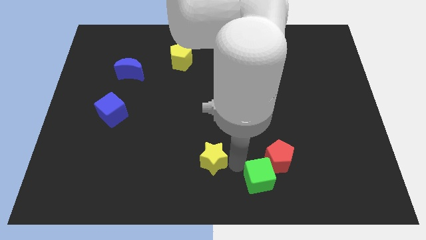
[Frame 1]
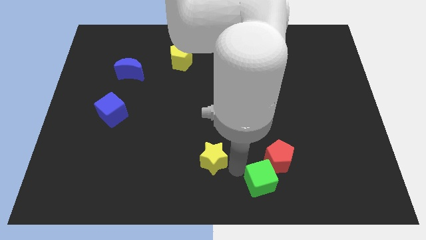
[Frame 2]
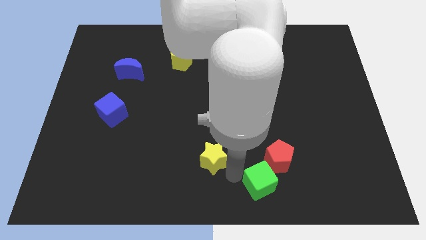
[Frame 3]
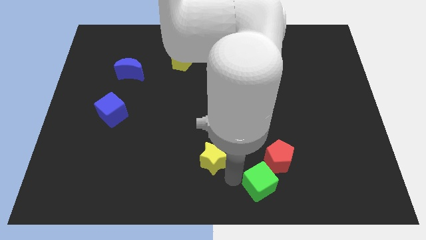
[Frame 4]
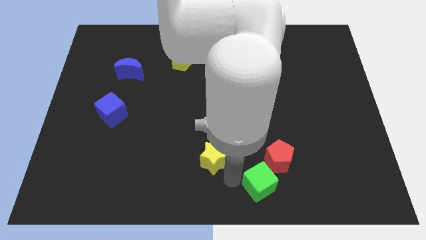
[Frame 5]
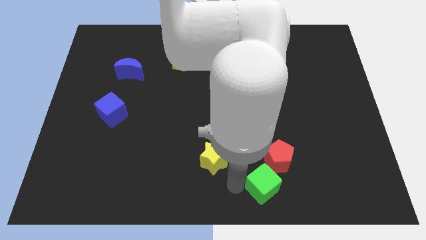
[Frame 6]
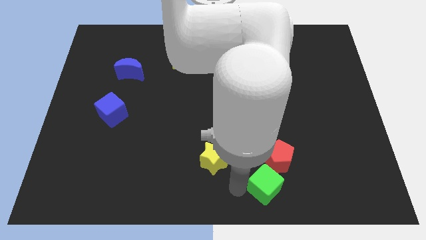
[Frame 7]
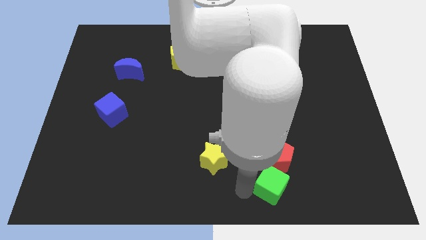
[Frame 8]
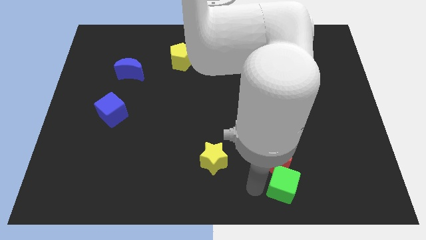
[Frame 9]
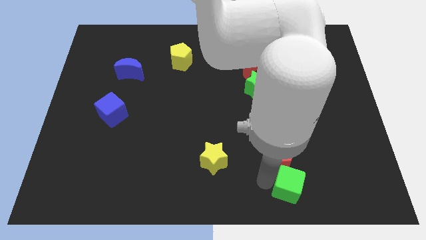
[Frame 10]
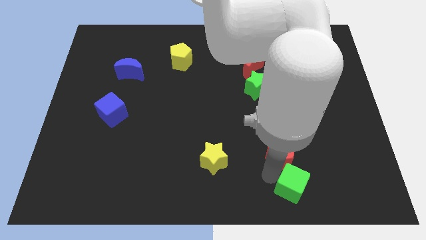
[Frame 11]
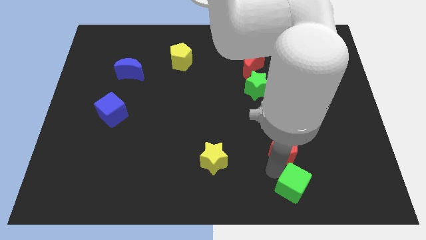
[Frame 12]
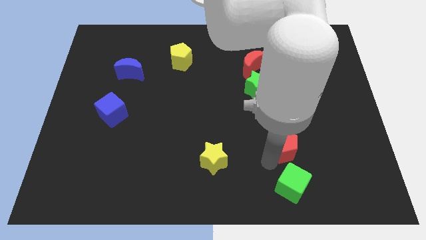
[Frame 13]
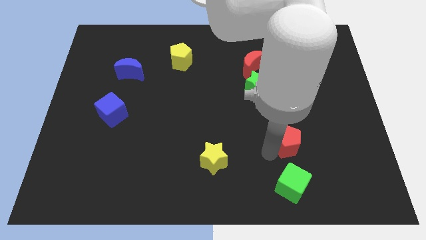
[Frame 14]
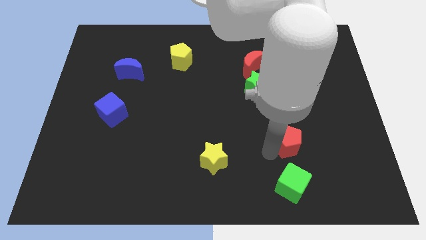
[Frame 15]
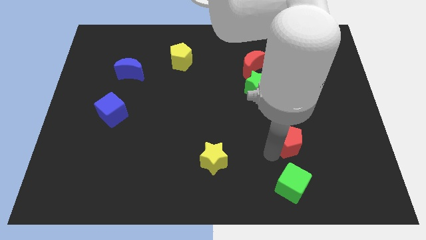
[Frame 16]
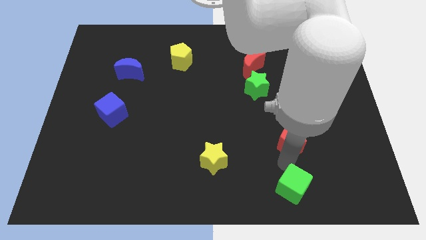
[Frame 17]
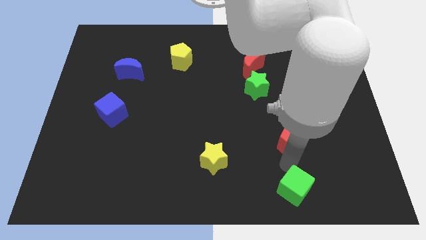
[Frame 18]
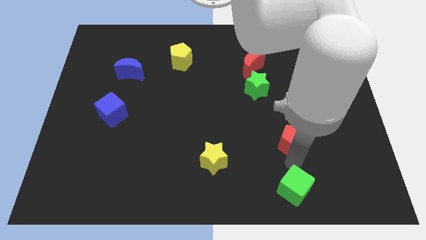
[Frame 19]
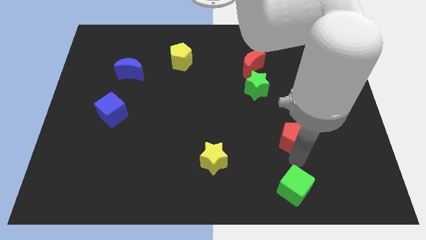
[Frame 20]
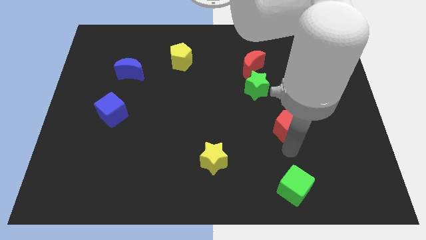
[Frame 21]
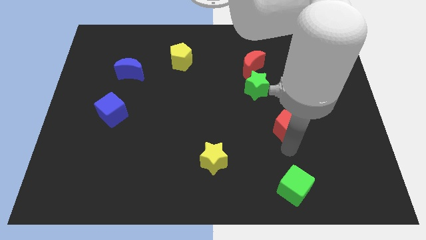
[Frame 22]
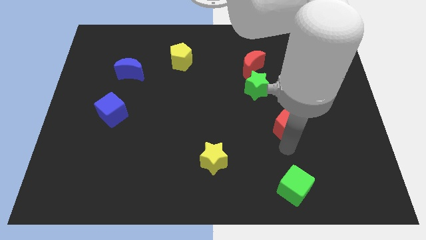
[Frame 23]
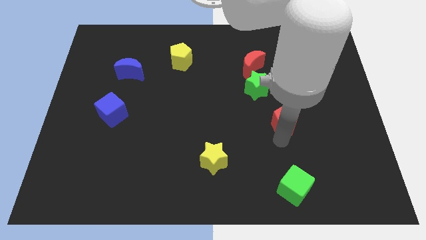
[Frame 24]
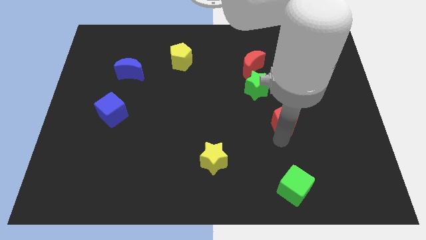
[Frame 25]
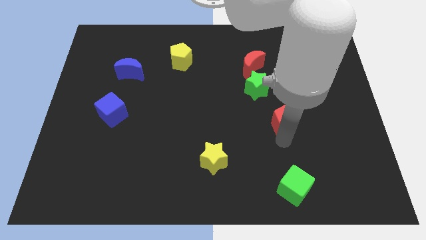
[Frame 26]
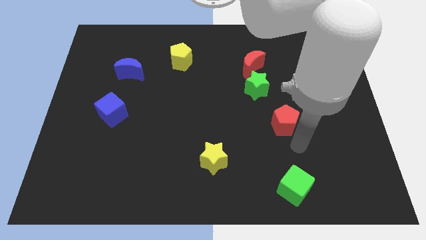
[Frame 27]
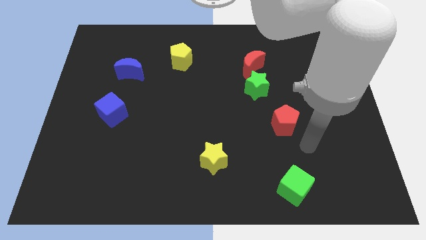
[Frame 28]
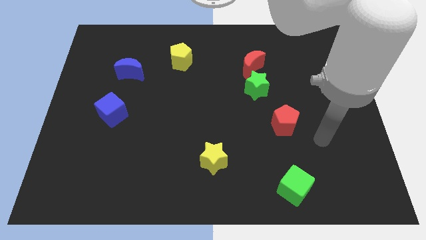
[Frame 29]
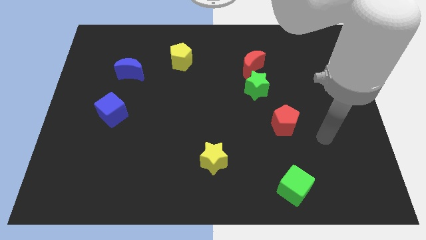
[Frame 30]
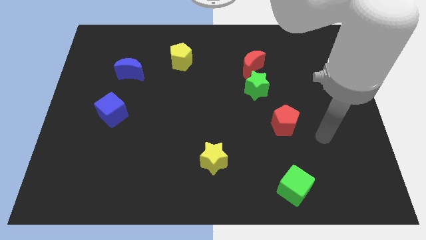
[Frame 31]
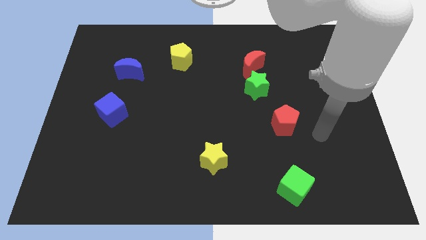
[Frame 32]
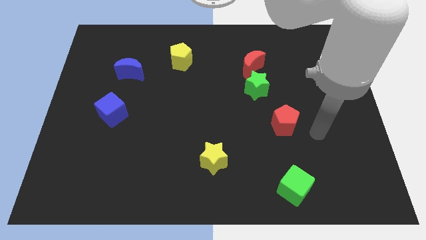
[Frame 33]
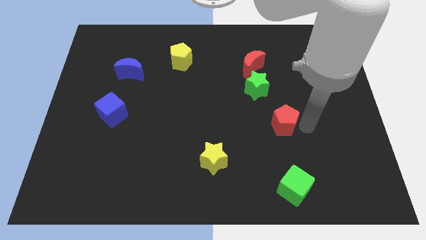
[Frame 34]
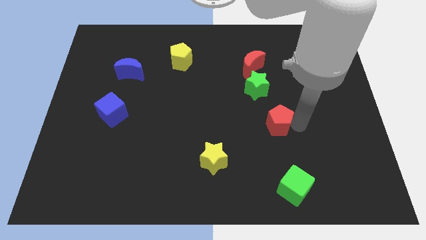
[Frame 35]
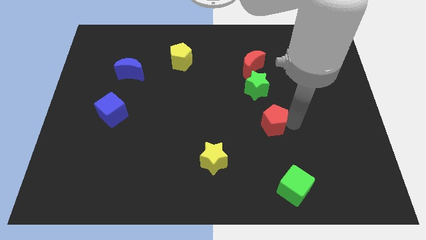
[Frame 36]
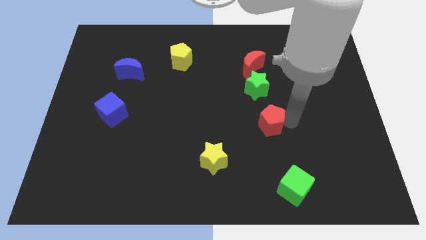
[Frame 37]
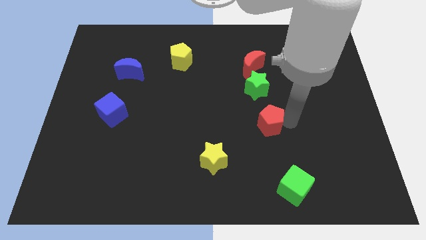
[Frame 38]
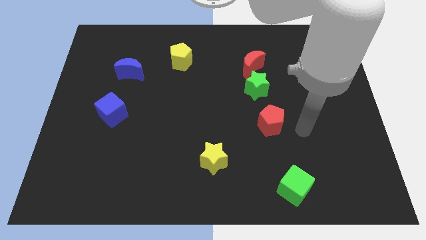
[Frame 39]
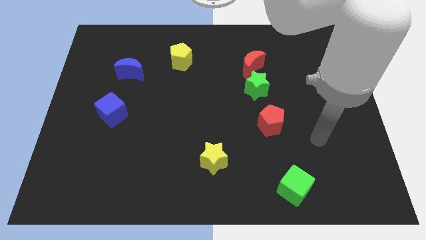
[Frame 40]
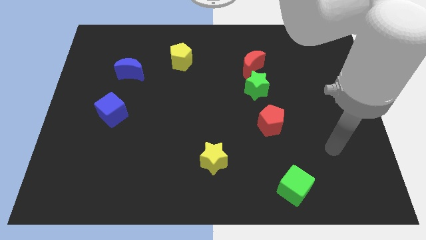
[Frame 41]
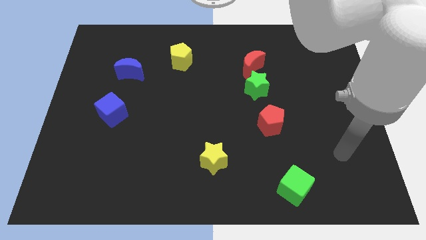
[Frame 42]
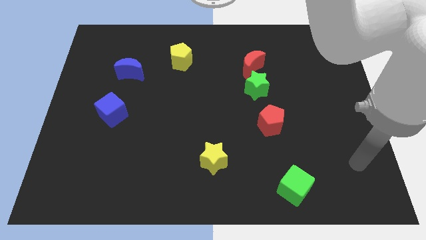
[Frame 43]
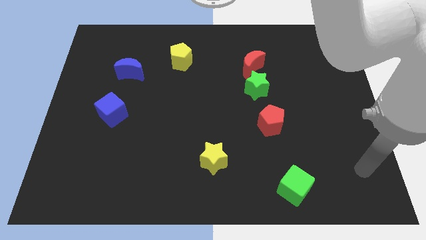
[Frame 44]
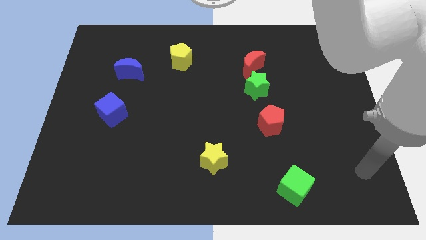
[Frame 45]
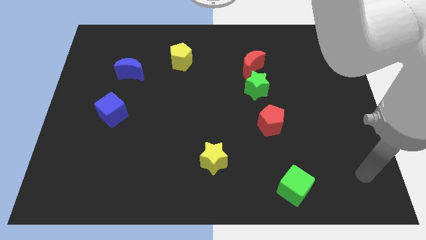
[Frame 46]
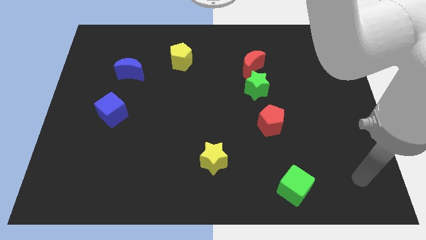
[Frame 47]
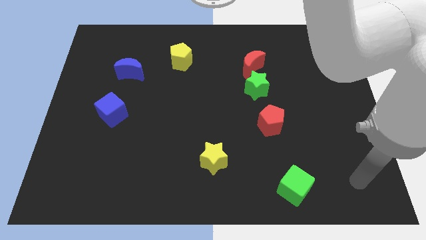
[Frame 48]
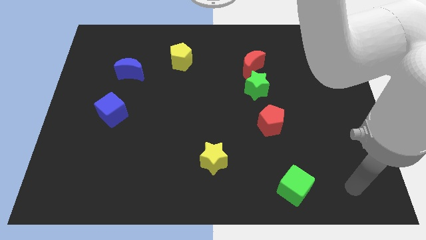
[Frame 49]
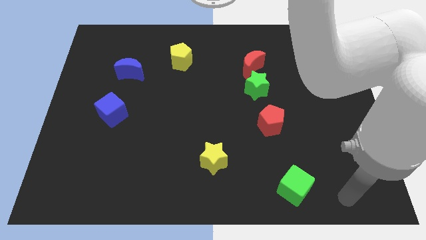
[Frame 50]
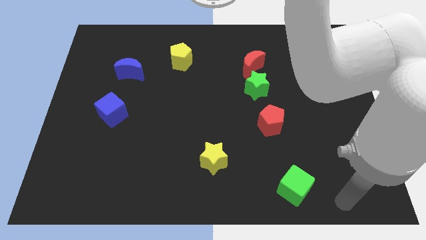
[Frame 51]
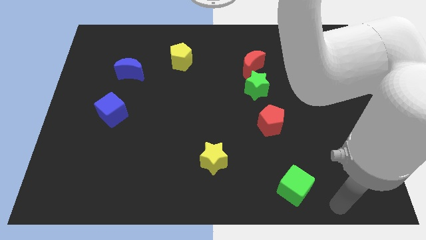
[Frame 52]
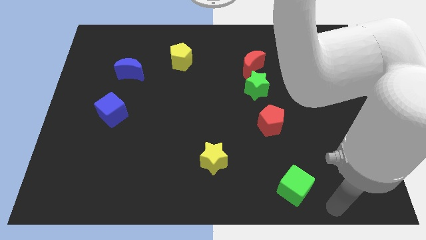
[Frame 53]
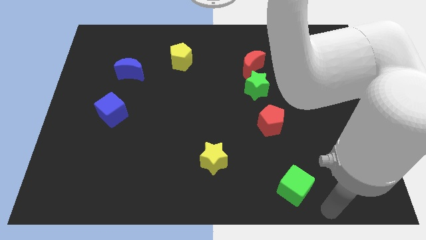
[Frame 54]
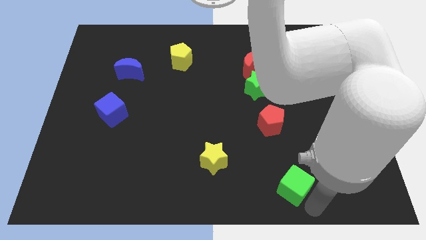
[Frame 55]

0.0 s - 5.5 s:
place the red pentagon in between the green star and green cube to form a line

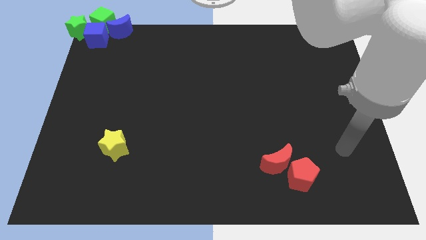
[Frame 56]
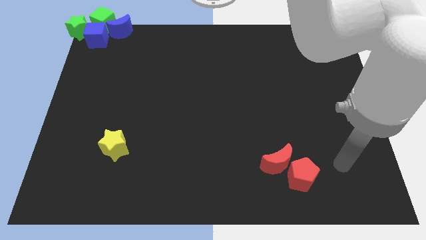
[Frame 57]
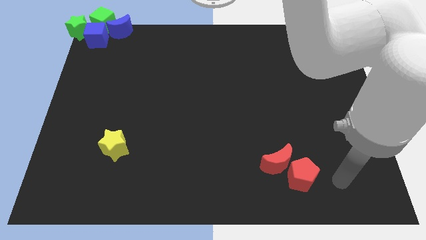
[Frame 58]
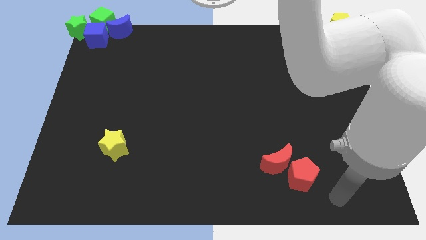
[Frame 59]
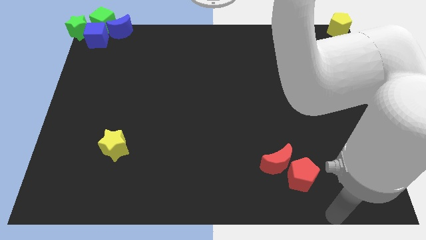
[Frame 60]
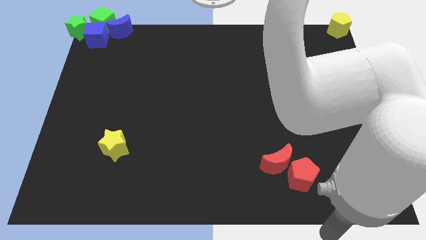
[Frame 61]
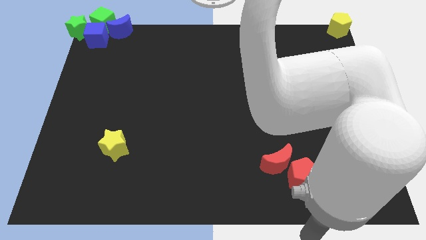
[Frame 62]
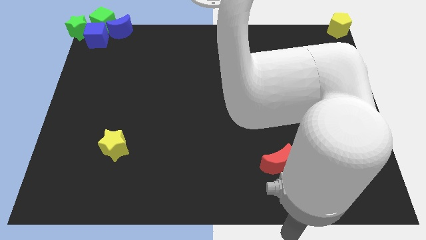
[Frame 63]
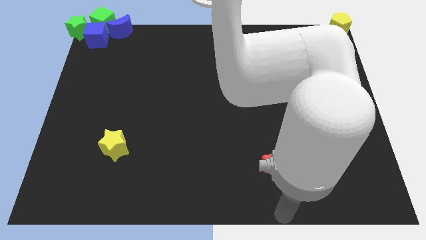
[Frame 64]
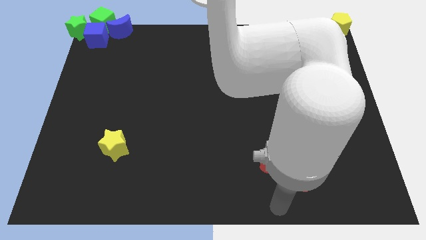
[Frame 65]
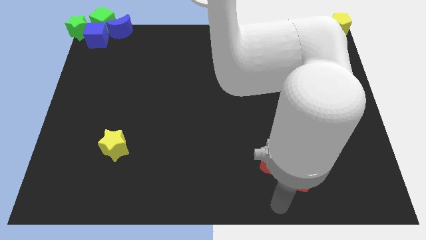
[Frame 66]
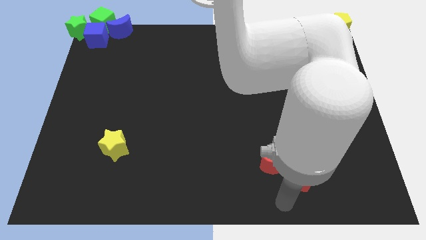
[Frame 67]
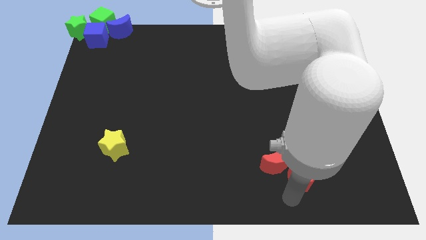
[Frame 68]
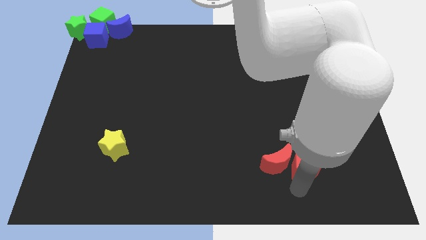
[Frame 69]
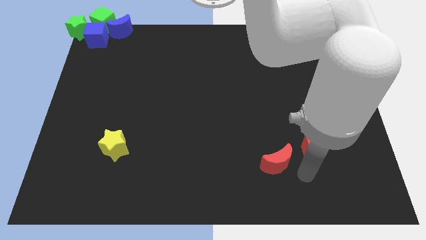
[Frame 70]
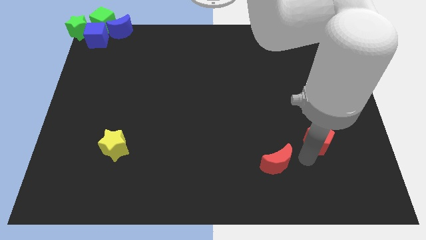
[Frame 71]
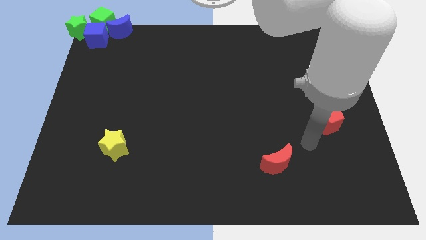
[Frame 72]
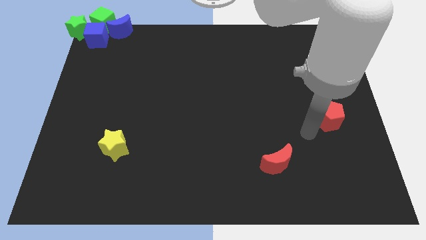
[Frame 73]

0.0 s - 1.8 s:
slide the red pentagon away from the red moon

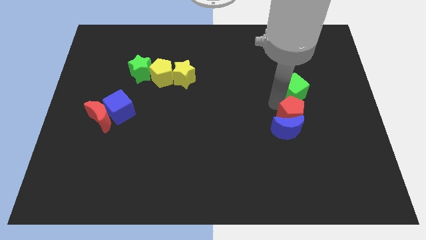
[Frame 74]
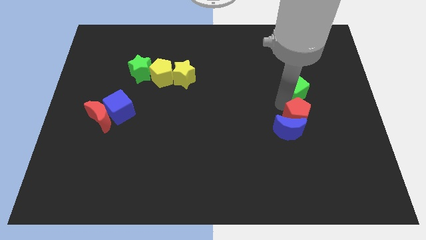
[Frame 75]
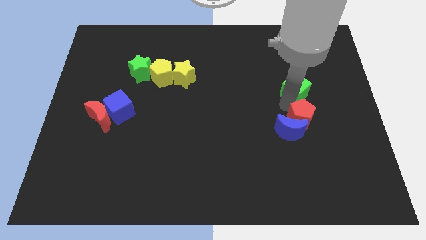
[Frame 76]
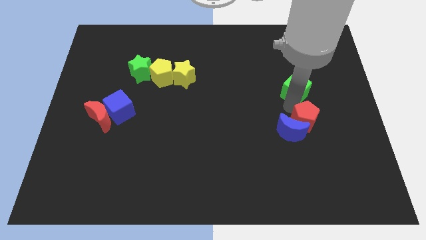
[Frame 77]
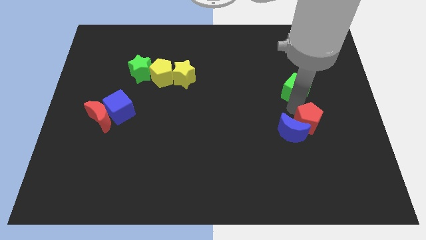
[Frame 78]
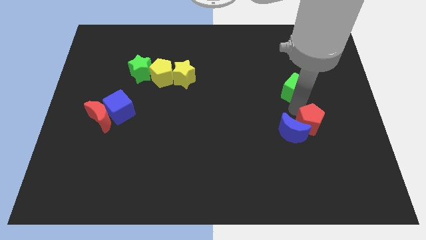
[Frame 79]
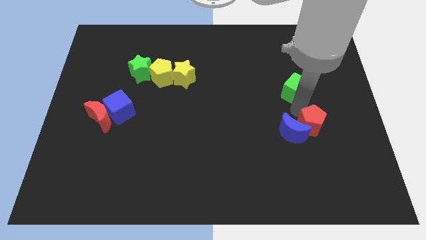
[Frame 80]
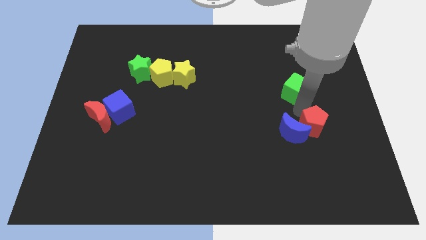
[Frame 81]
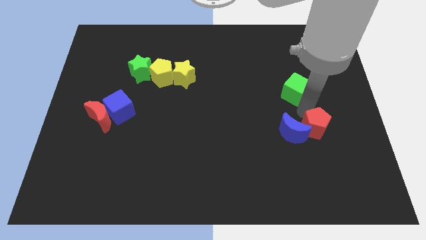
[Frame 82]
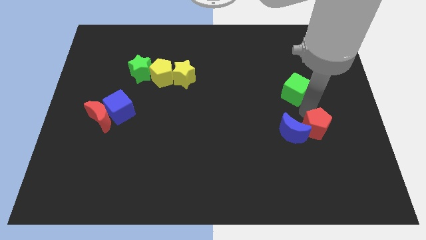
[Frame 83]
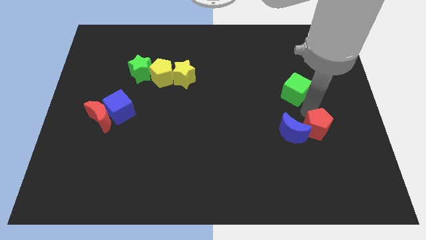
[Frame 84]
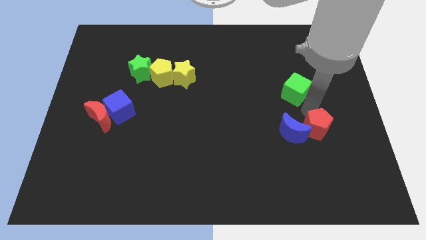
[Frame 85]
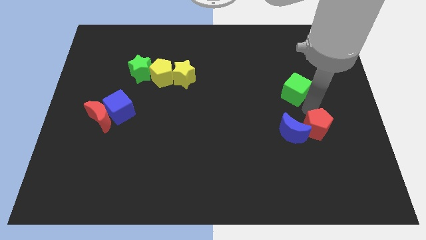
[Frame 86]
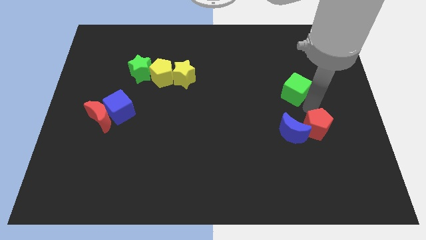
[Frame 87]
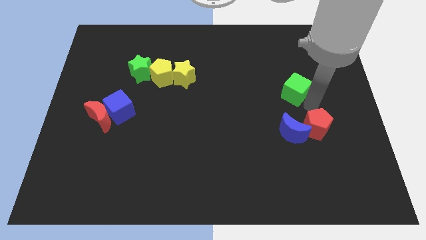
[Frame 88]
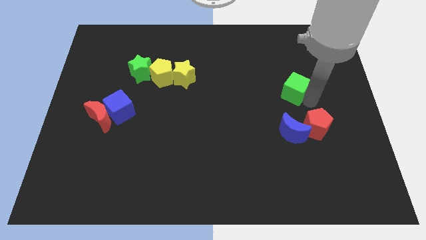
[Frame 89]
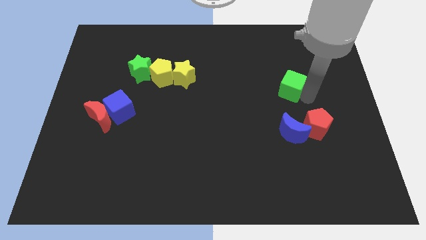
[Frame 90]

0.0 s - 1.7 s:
separate red pentagon from the green cube
